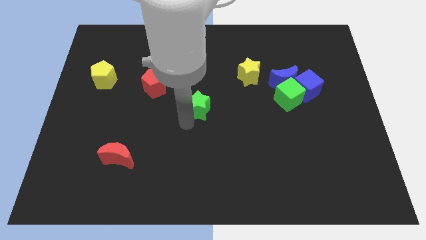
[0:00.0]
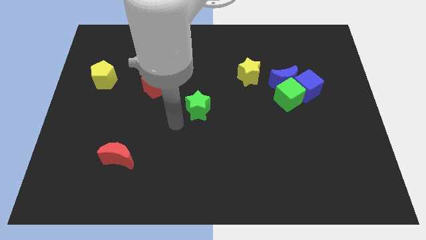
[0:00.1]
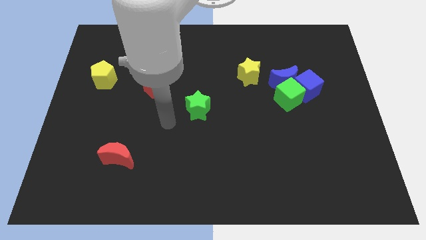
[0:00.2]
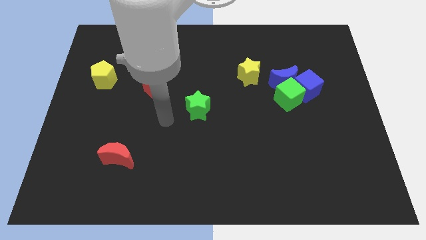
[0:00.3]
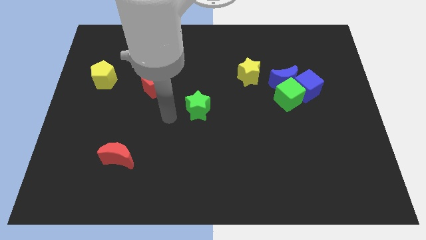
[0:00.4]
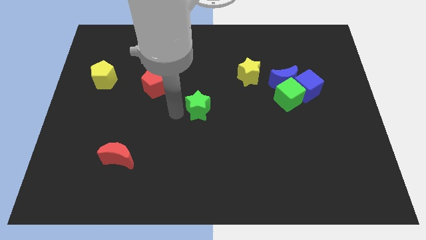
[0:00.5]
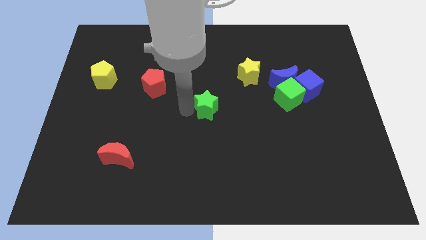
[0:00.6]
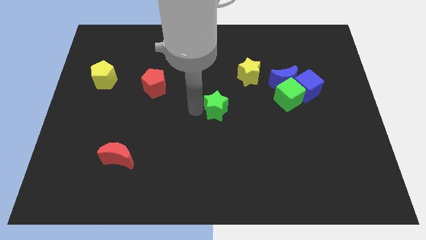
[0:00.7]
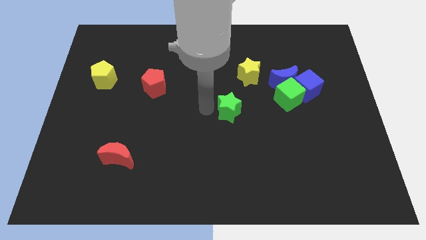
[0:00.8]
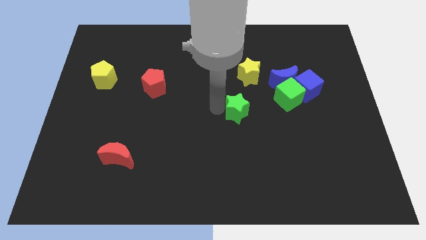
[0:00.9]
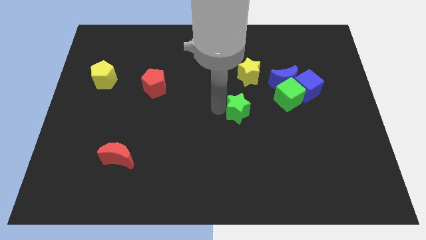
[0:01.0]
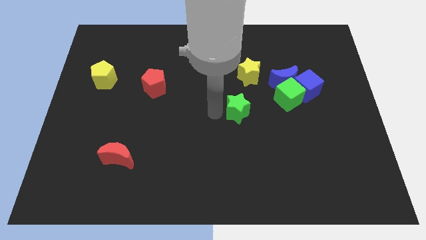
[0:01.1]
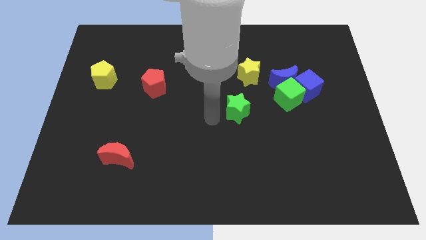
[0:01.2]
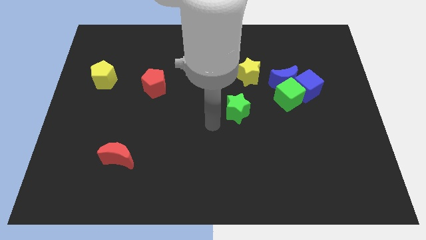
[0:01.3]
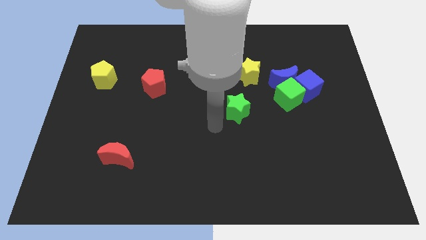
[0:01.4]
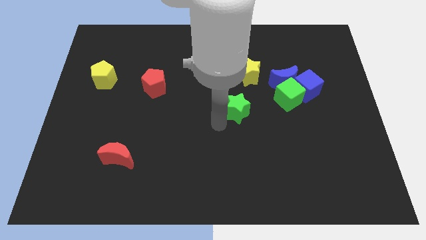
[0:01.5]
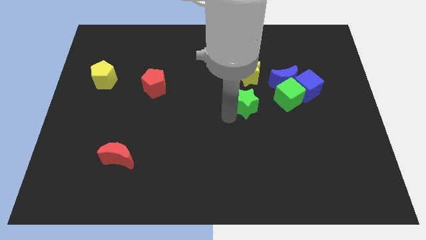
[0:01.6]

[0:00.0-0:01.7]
place the green star below the yellow star

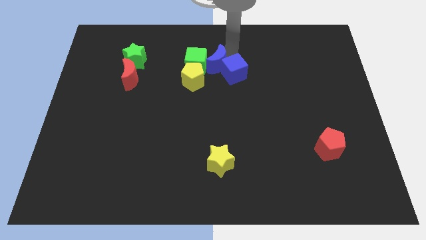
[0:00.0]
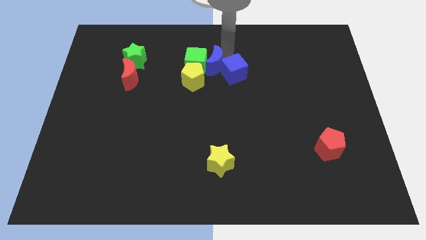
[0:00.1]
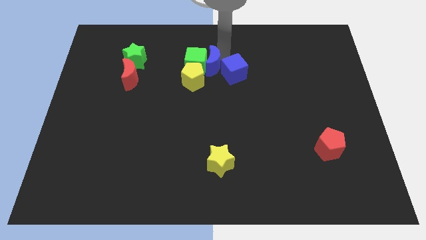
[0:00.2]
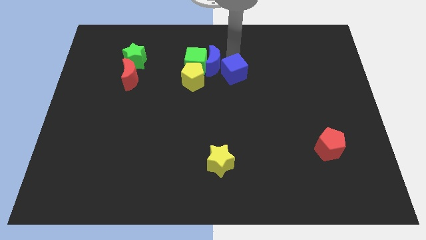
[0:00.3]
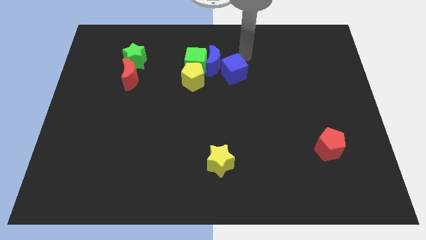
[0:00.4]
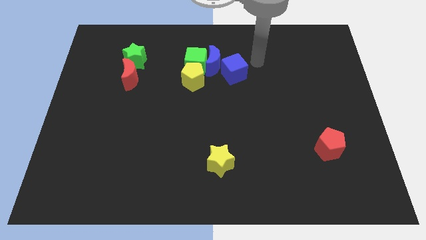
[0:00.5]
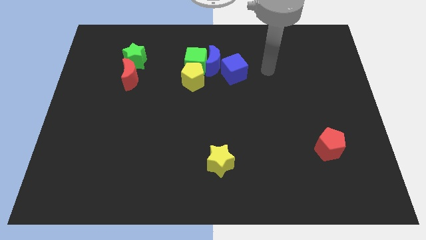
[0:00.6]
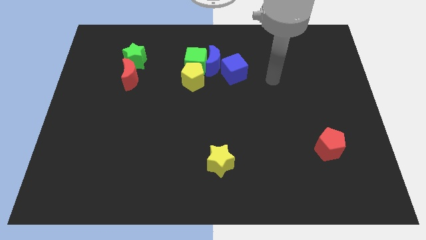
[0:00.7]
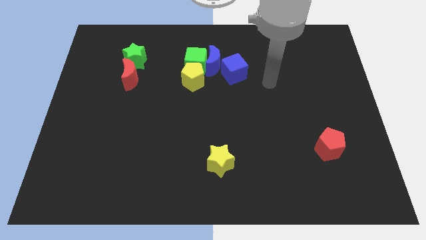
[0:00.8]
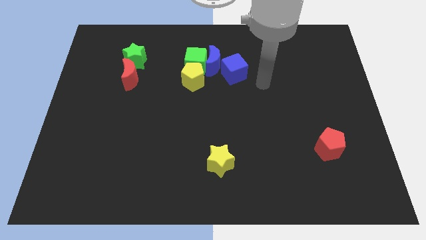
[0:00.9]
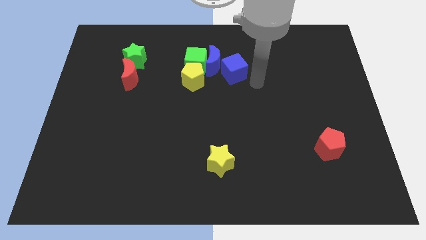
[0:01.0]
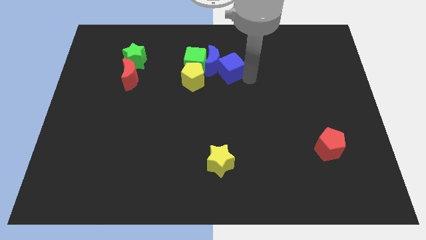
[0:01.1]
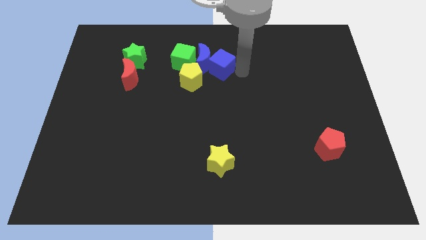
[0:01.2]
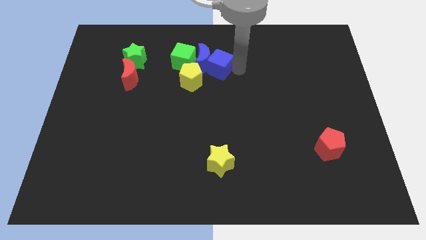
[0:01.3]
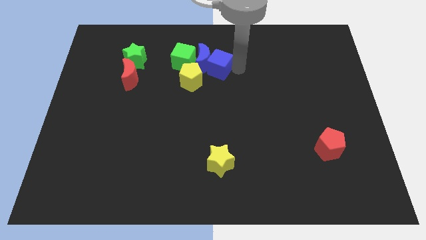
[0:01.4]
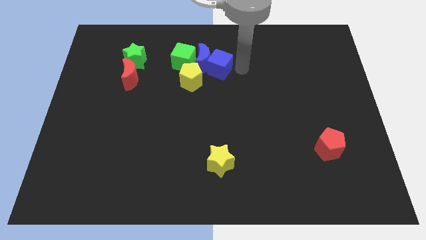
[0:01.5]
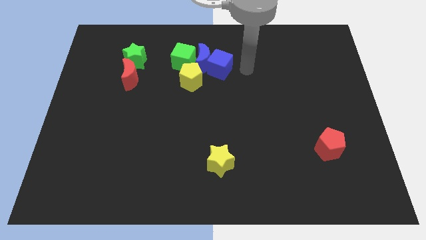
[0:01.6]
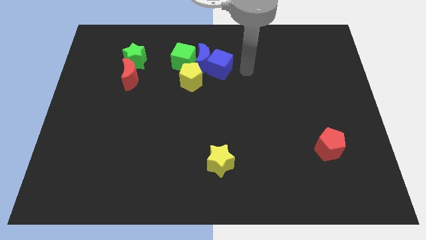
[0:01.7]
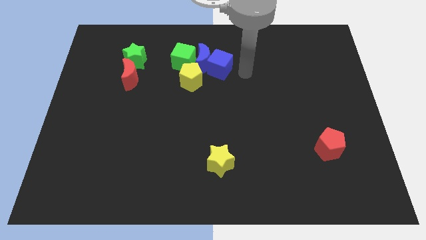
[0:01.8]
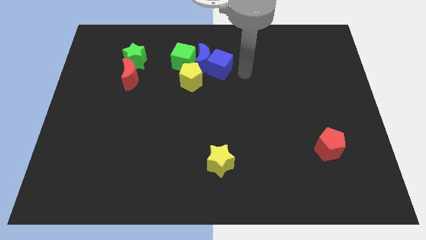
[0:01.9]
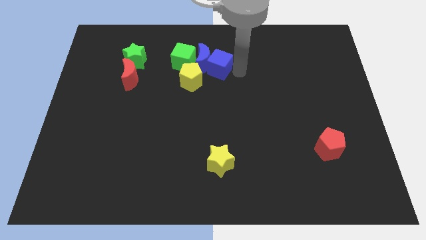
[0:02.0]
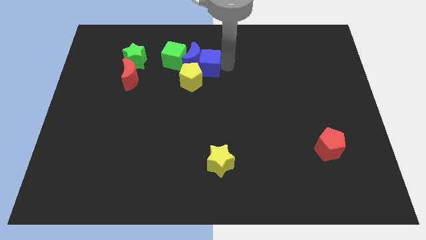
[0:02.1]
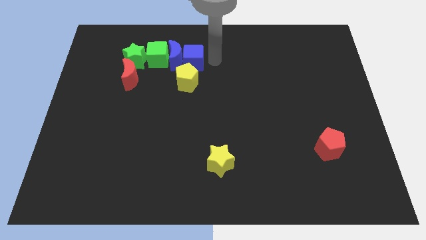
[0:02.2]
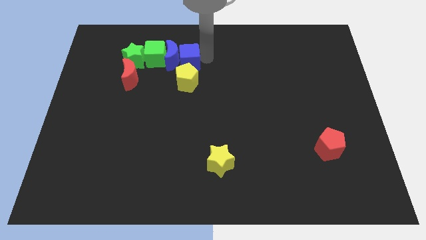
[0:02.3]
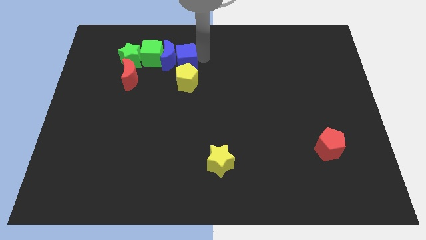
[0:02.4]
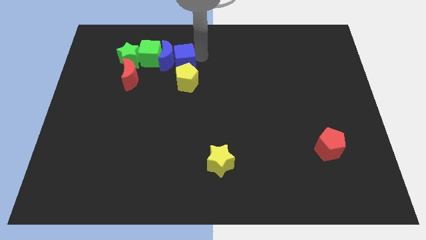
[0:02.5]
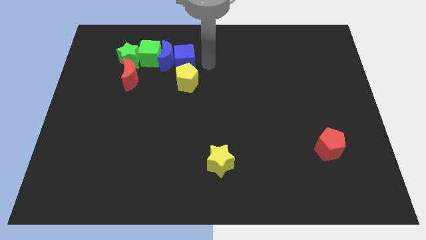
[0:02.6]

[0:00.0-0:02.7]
group up the blue and green blocks at the top of the red moon and yellow pentagon

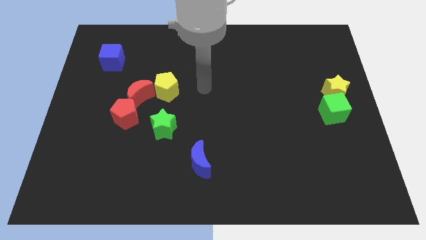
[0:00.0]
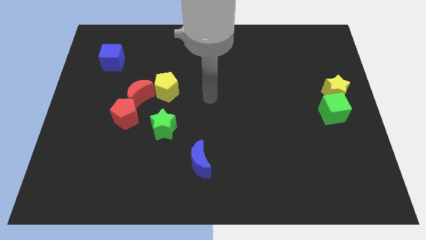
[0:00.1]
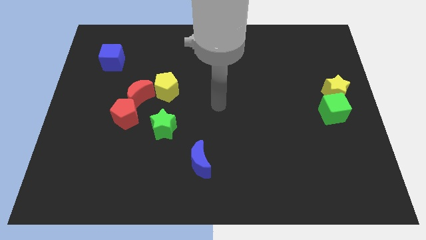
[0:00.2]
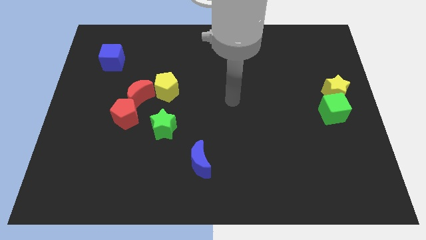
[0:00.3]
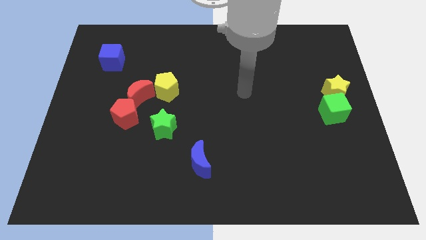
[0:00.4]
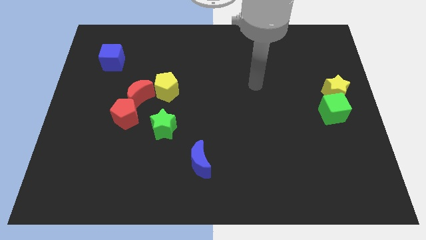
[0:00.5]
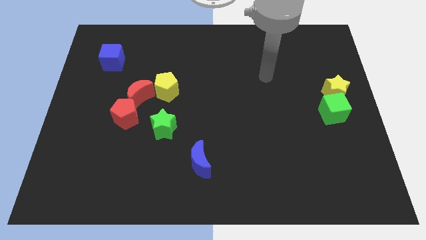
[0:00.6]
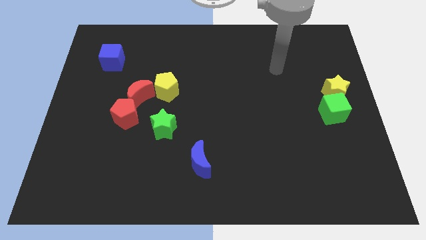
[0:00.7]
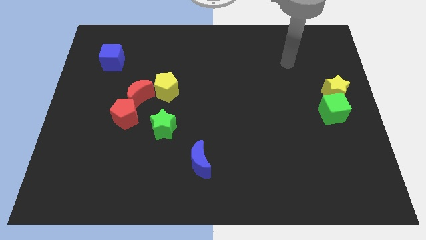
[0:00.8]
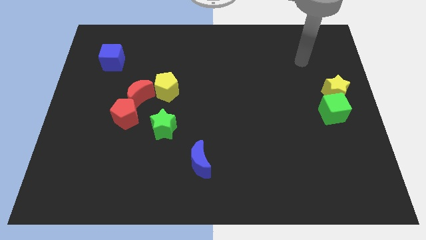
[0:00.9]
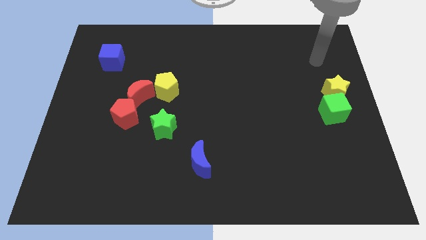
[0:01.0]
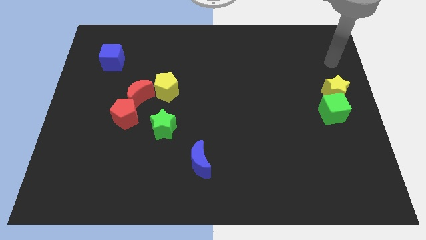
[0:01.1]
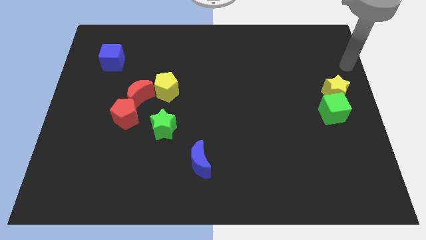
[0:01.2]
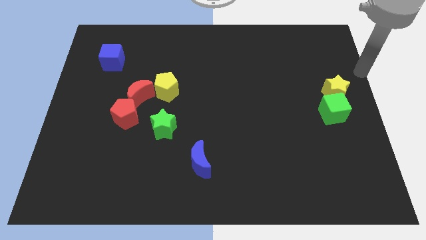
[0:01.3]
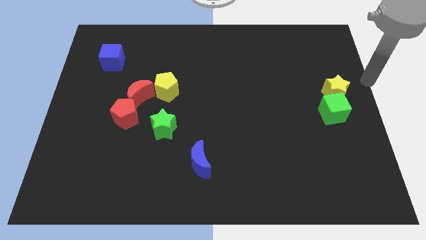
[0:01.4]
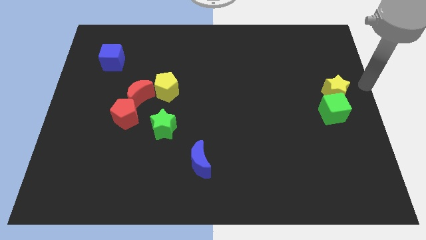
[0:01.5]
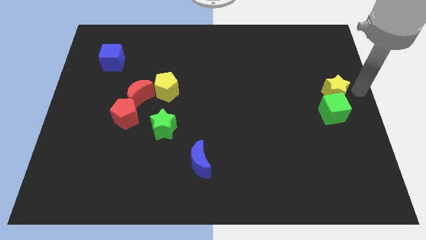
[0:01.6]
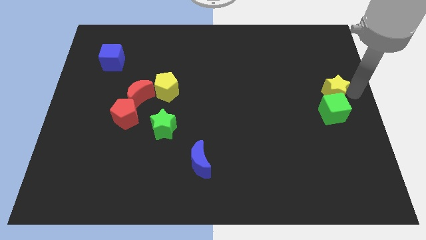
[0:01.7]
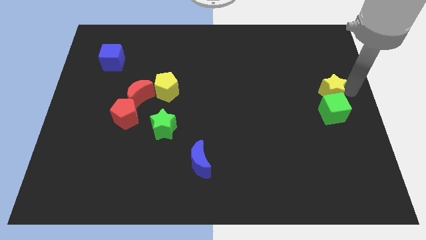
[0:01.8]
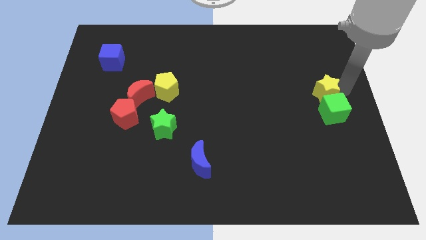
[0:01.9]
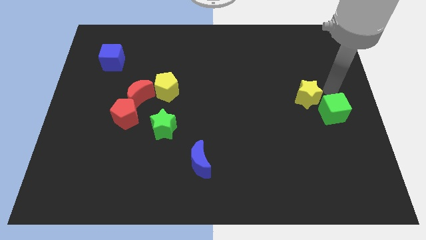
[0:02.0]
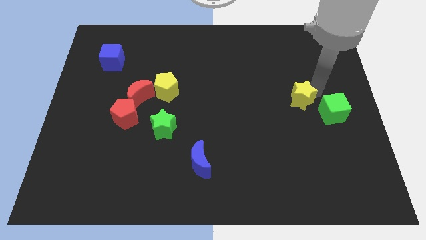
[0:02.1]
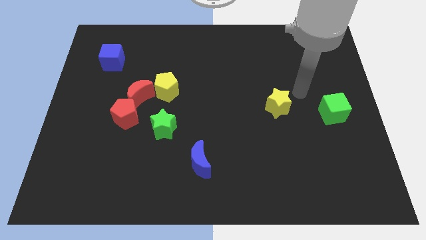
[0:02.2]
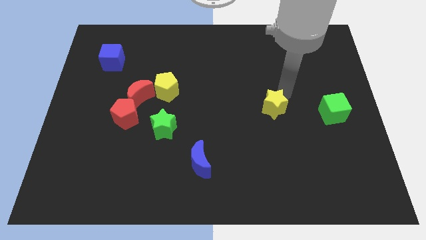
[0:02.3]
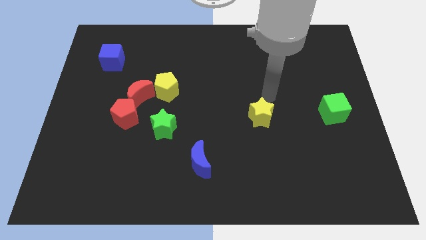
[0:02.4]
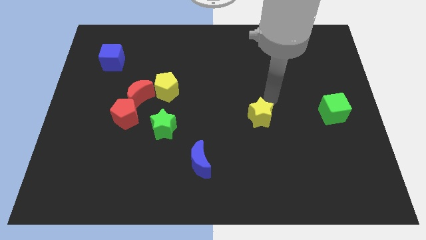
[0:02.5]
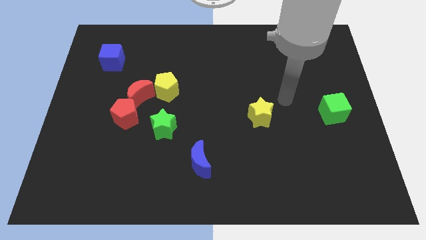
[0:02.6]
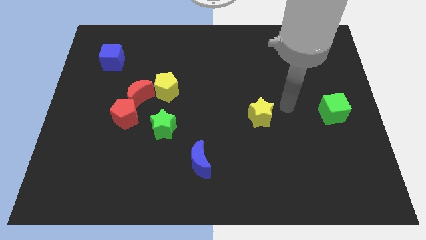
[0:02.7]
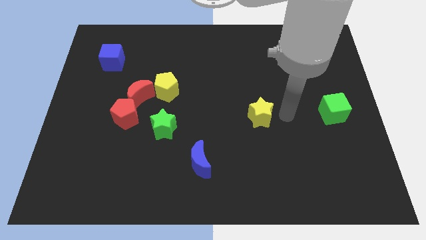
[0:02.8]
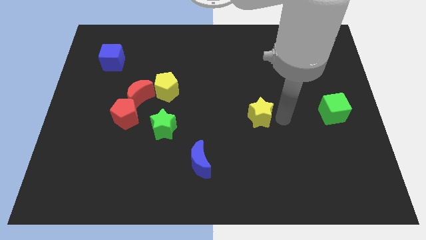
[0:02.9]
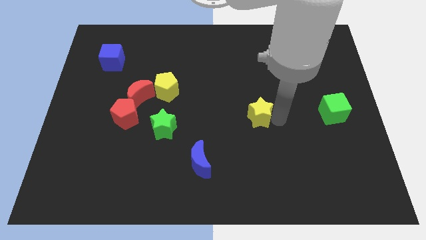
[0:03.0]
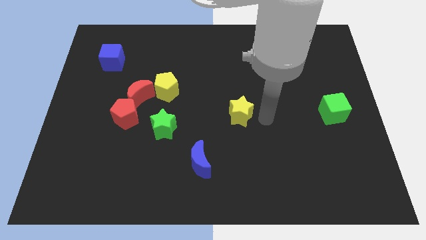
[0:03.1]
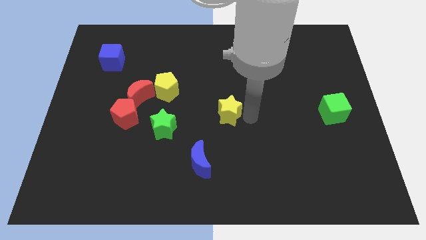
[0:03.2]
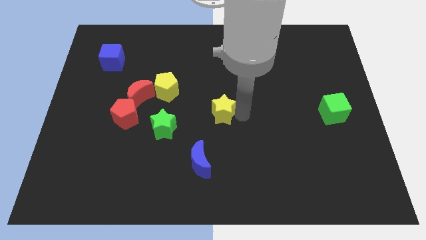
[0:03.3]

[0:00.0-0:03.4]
place yellow star in between the green cube and green star

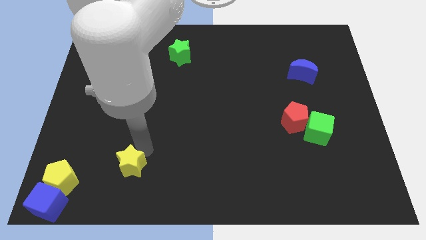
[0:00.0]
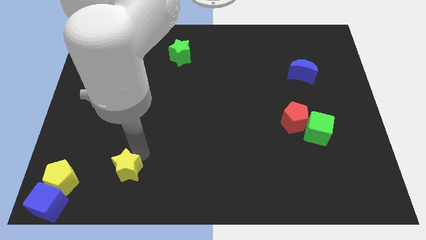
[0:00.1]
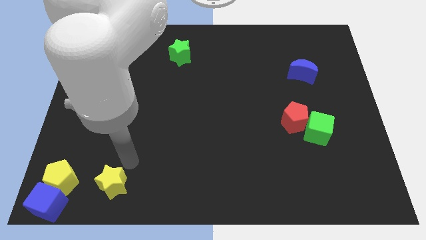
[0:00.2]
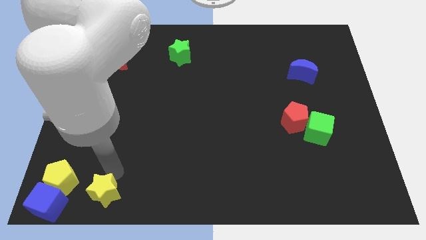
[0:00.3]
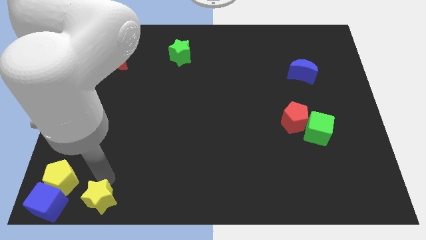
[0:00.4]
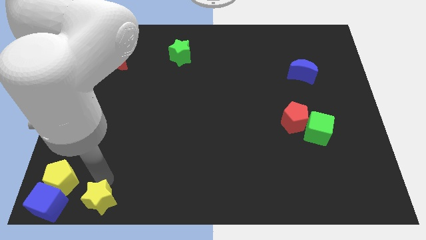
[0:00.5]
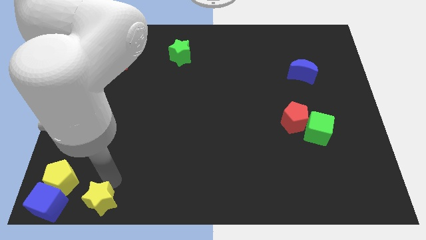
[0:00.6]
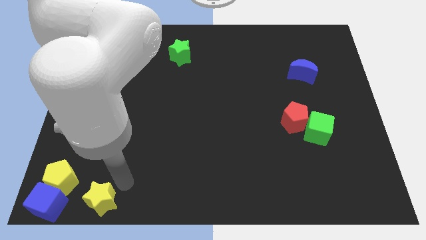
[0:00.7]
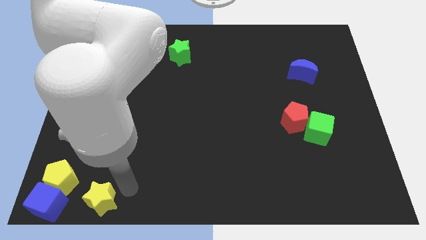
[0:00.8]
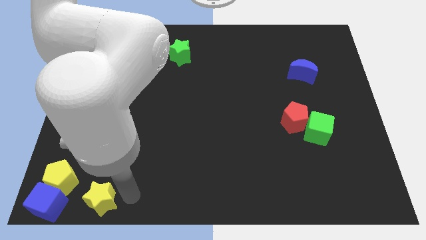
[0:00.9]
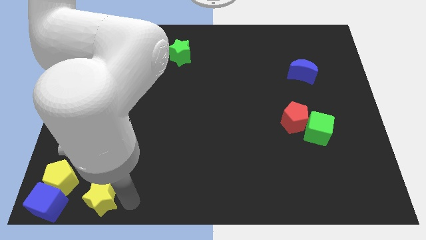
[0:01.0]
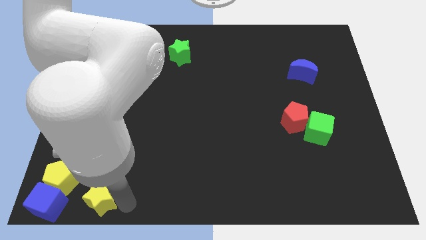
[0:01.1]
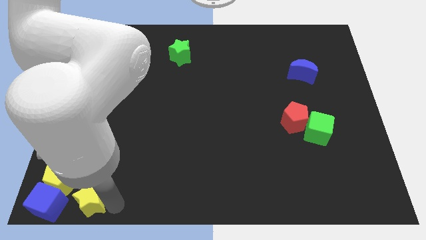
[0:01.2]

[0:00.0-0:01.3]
push the yellow star to the right side of blue cube
